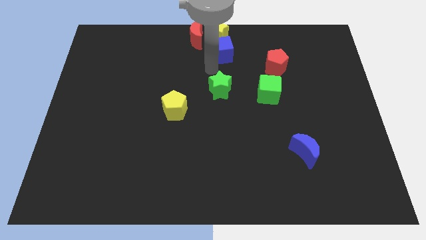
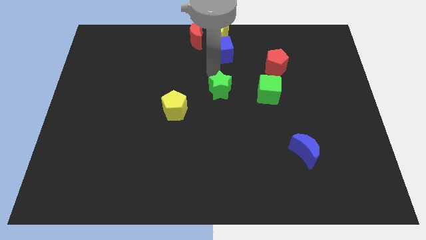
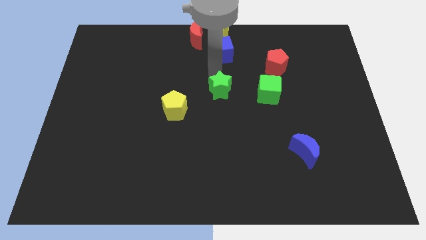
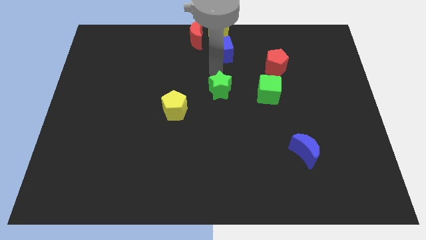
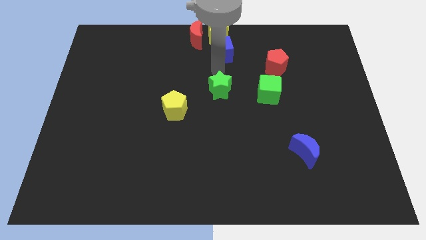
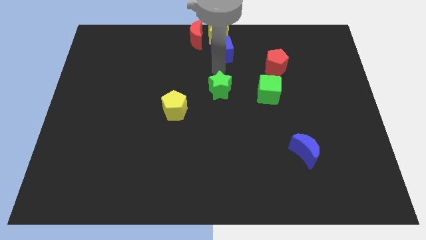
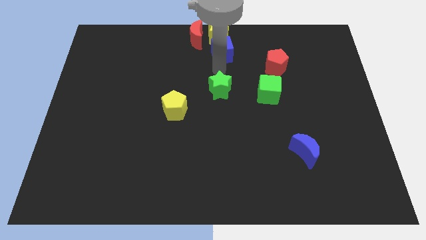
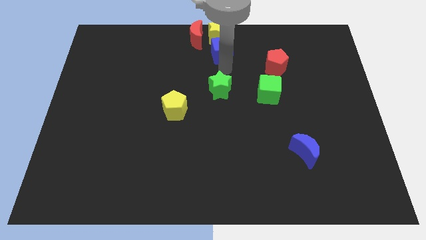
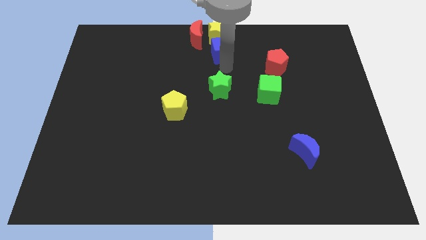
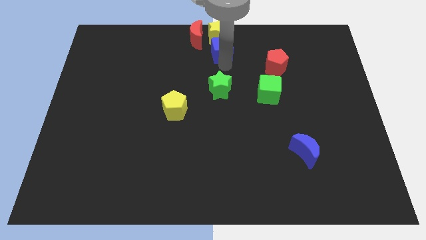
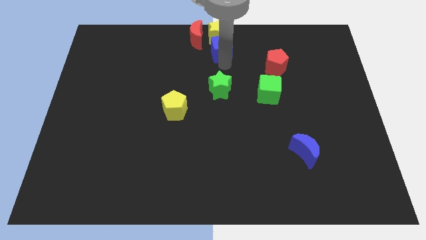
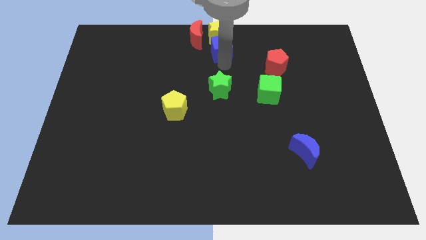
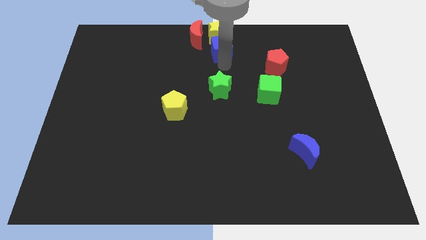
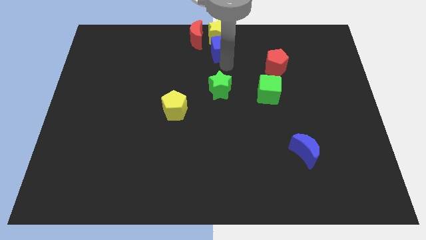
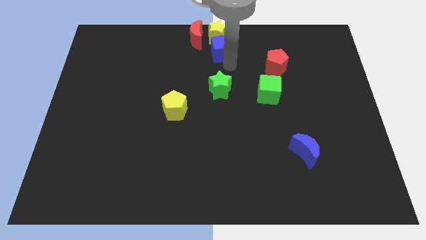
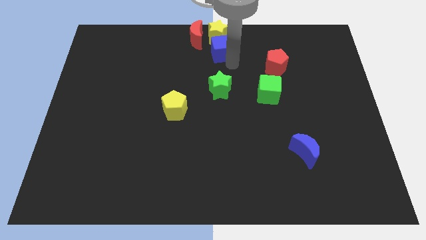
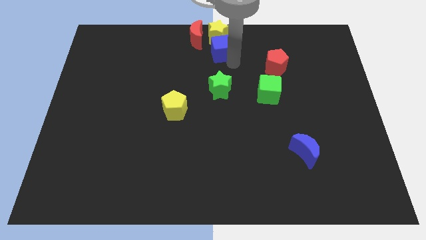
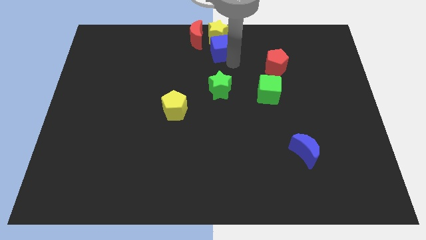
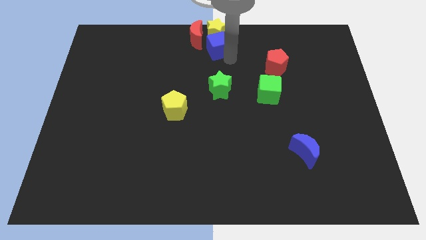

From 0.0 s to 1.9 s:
push the blue cube into the bottom side of the yellow star

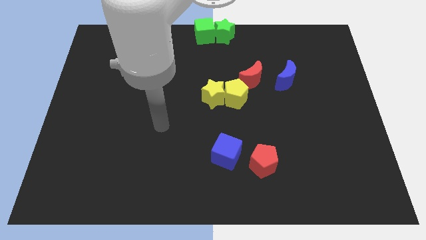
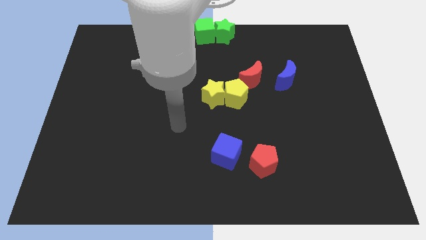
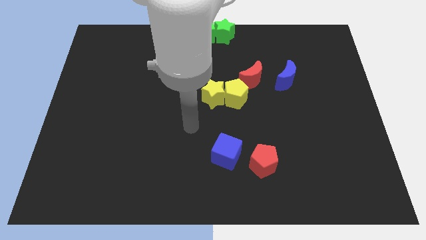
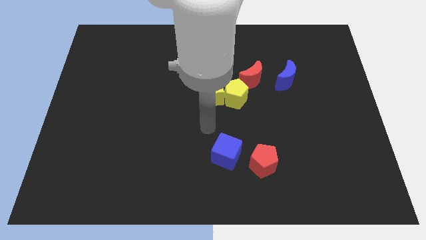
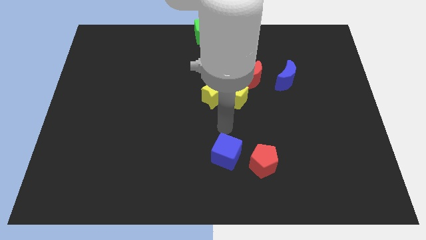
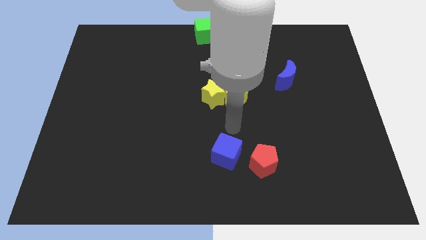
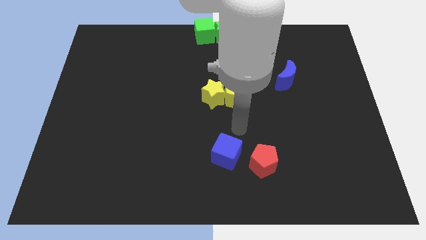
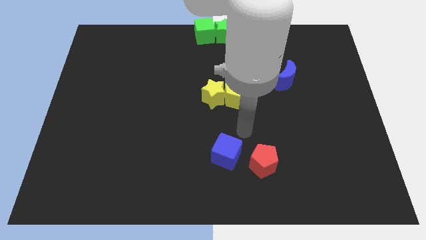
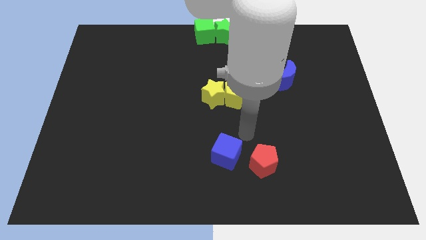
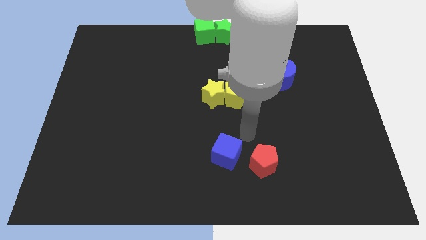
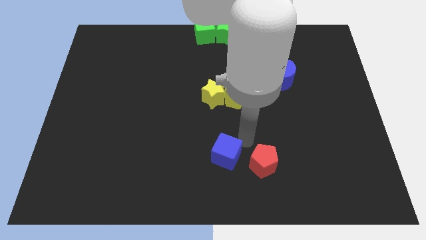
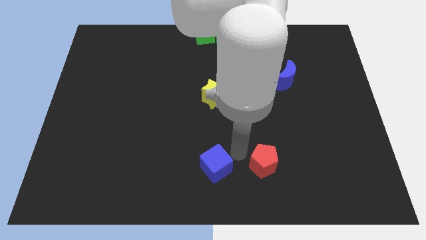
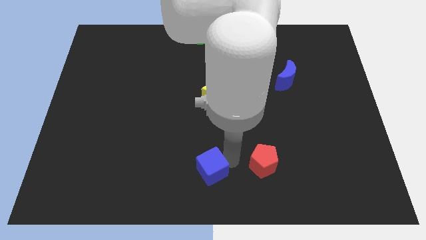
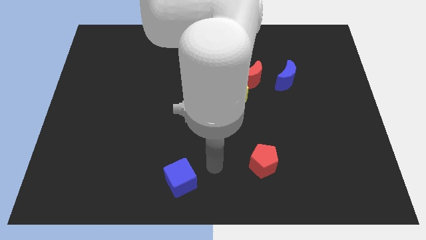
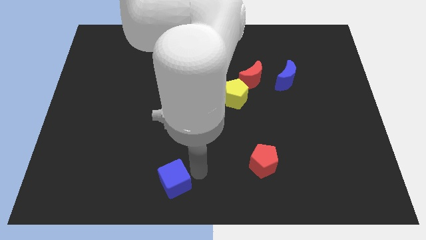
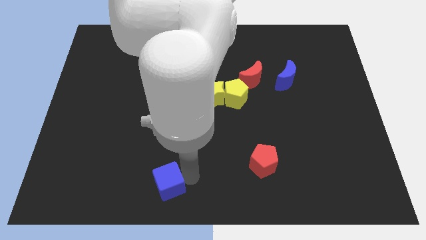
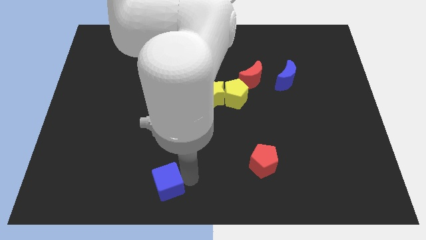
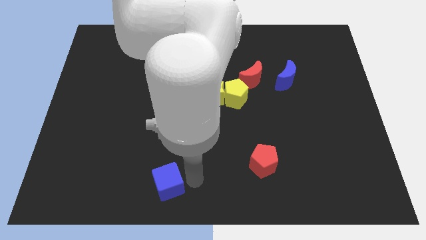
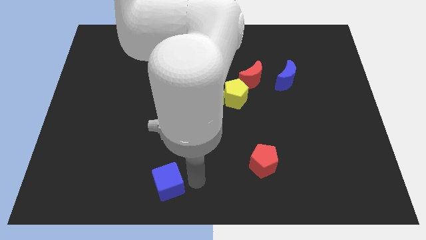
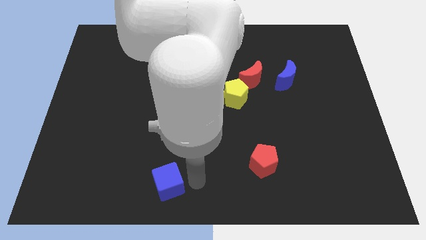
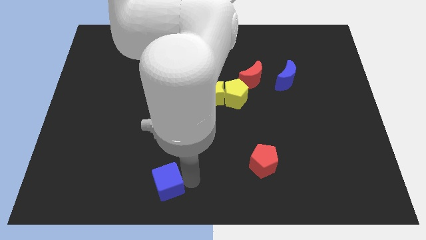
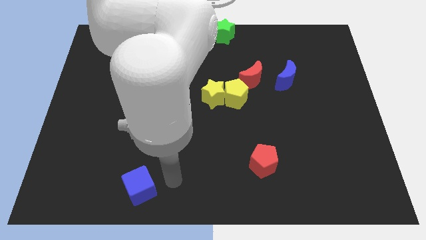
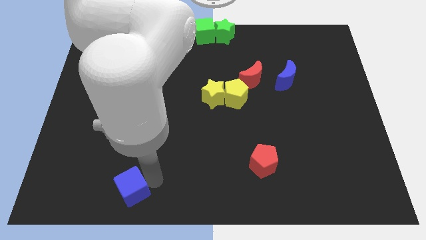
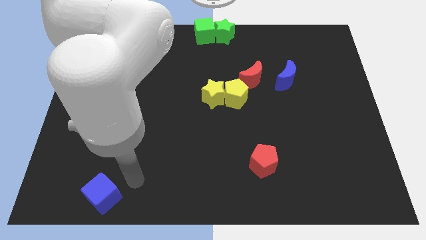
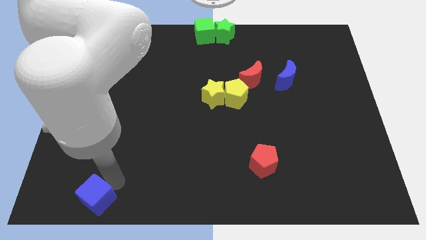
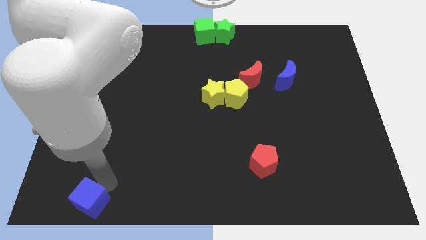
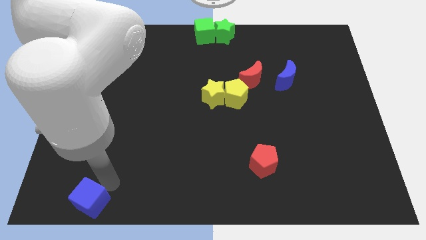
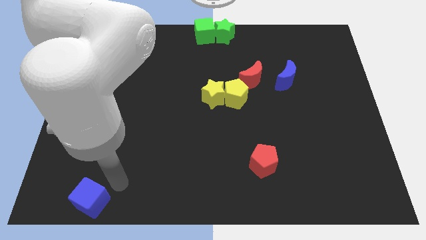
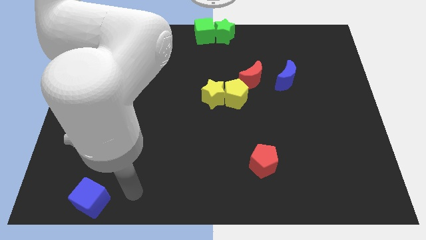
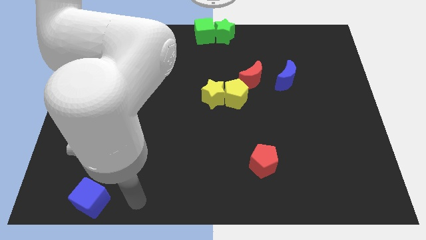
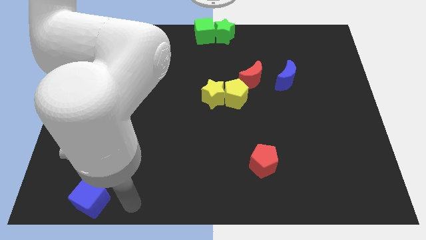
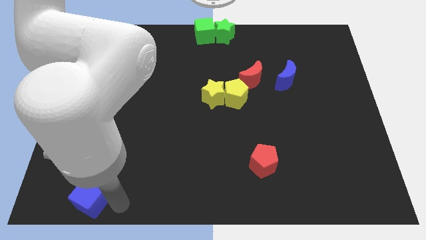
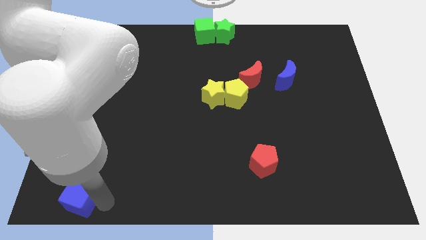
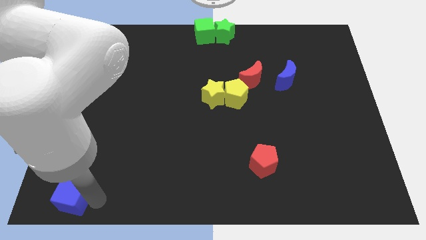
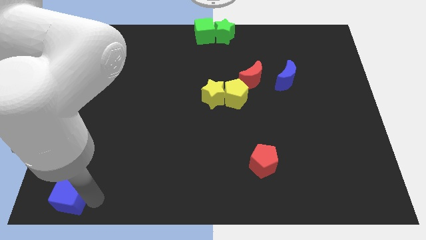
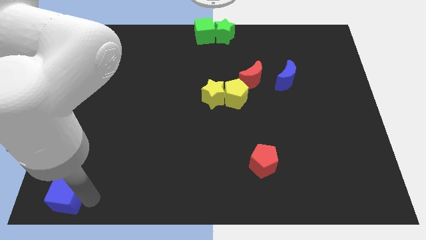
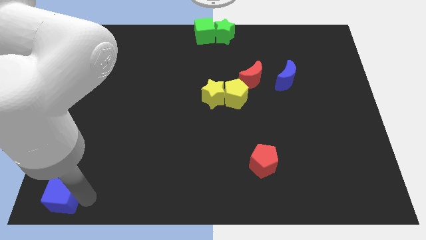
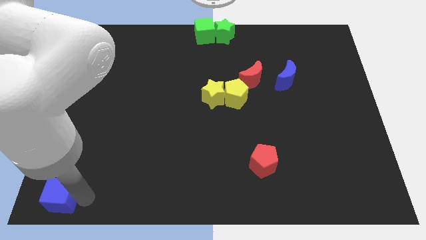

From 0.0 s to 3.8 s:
put the blue cube at the bottom left corner of the board

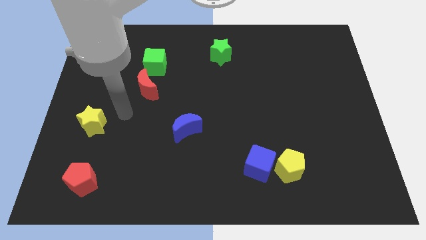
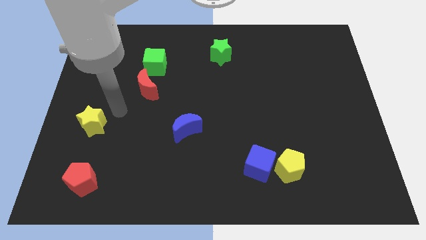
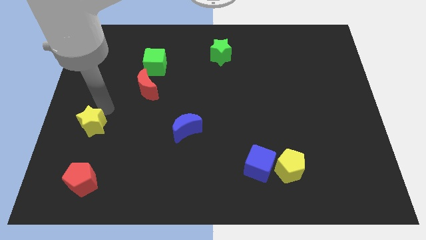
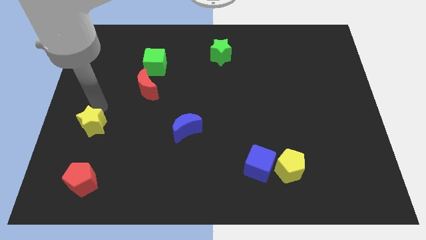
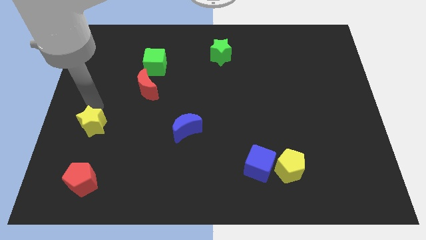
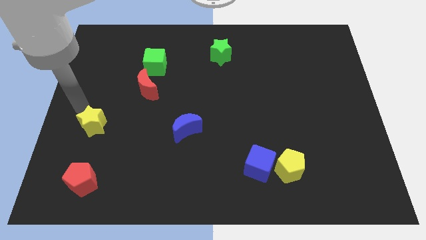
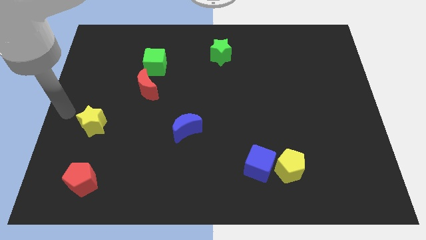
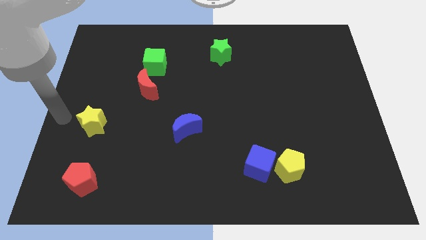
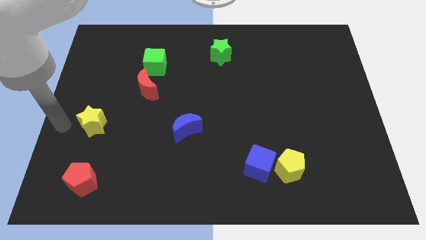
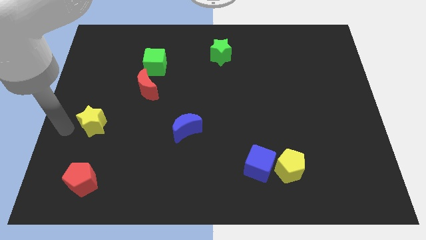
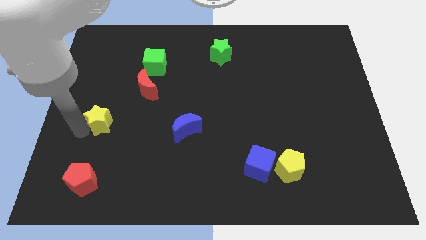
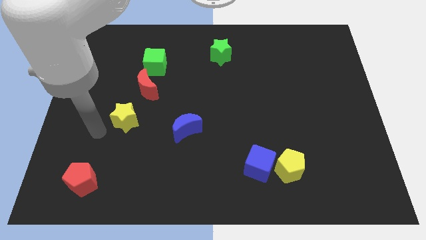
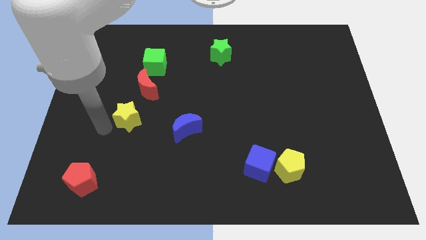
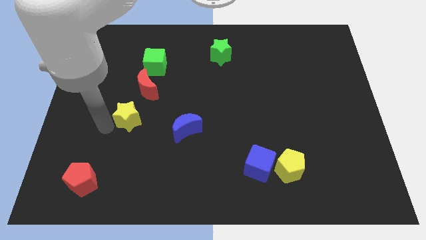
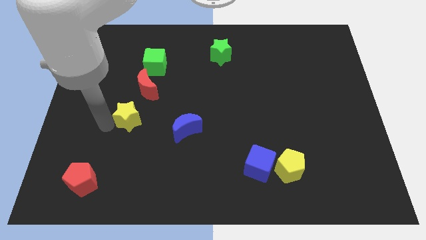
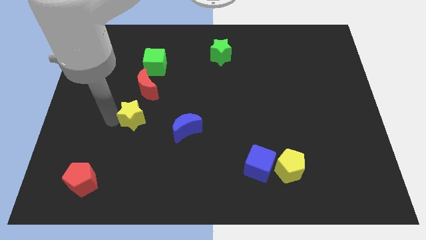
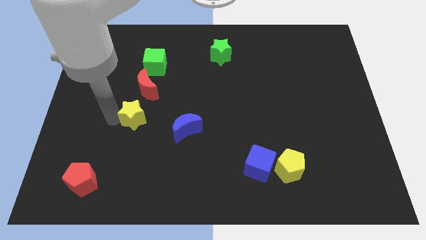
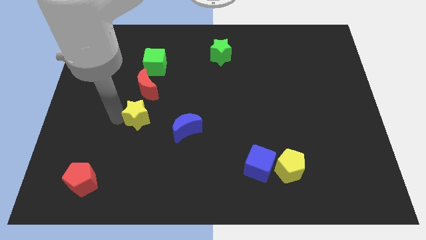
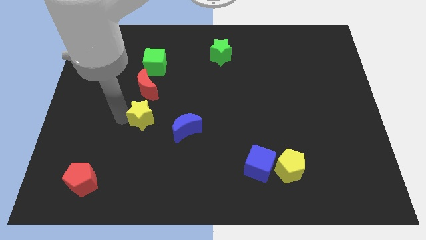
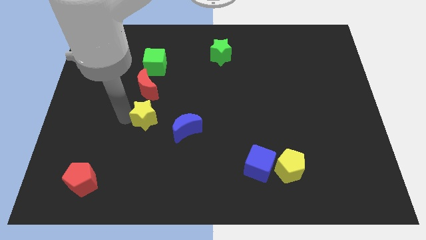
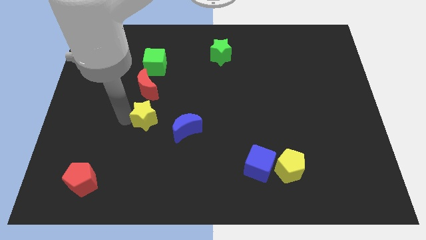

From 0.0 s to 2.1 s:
place the yellow star below the red moon

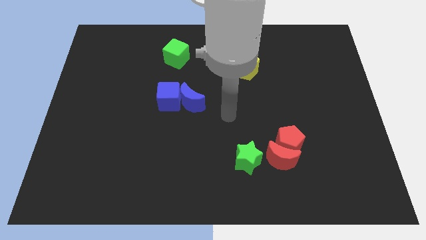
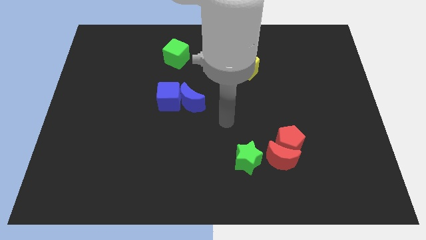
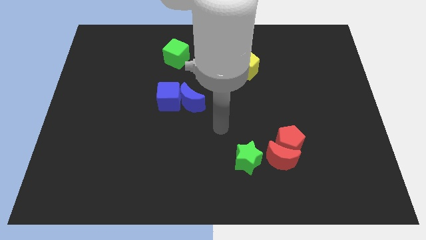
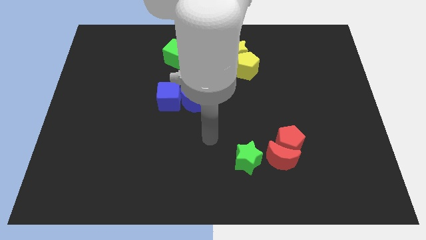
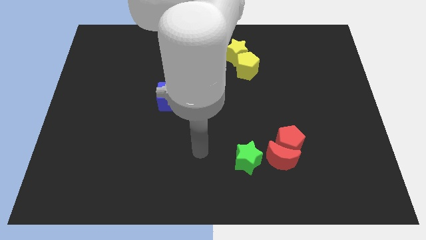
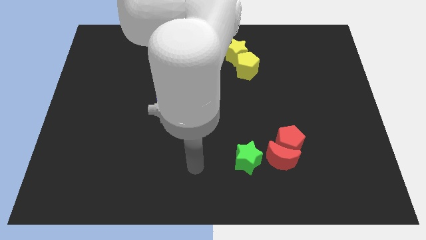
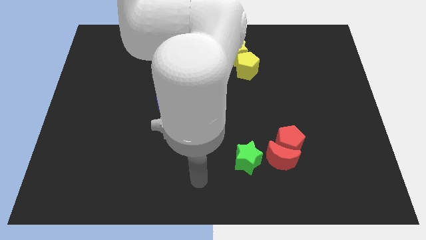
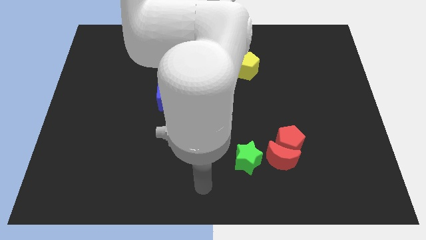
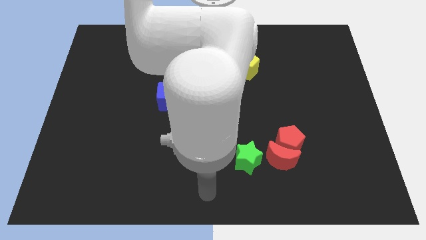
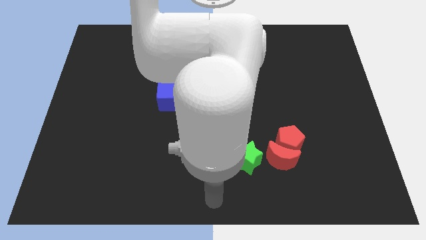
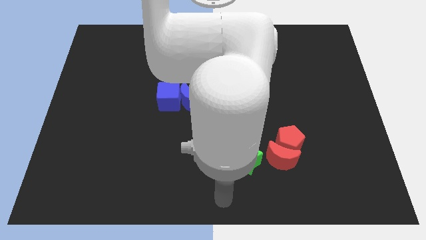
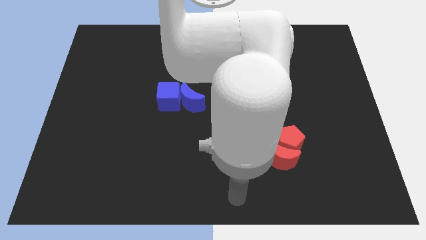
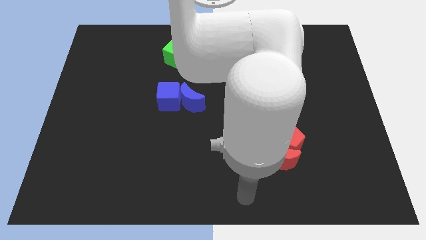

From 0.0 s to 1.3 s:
place your arm to the bottom of the board
